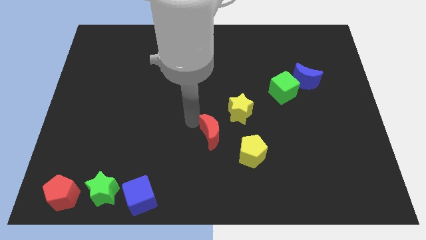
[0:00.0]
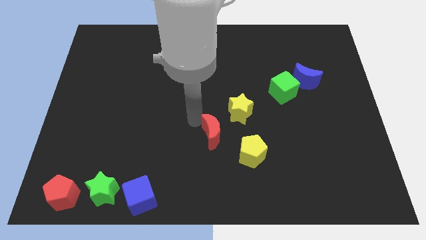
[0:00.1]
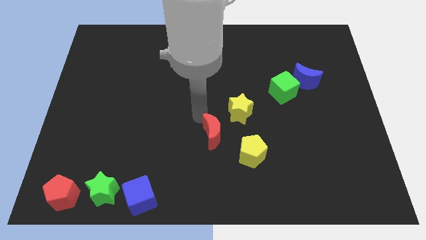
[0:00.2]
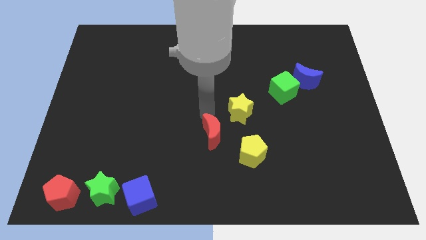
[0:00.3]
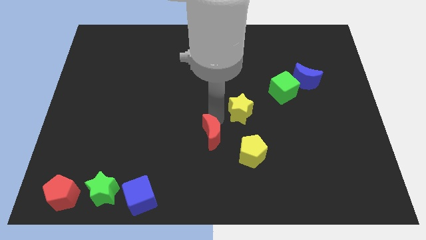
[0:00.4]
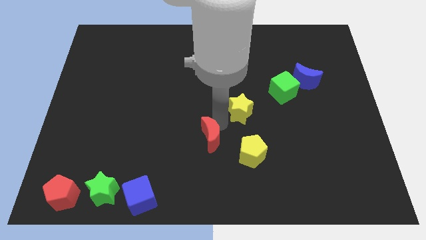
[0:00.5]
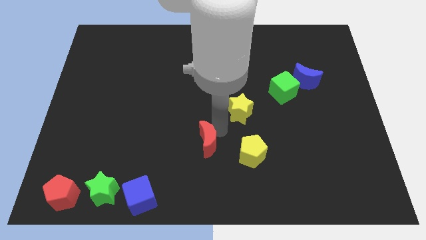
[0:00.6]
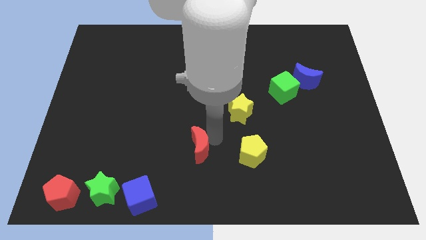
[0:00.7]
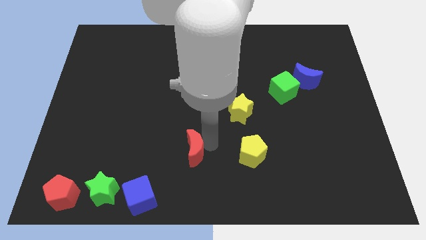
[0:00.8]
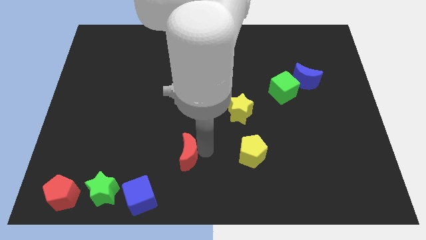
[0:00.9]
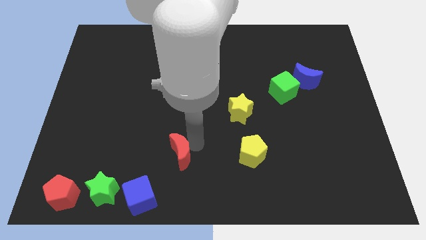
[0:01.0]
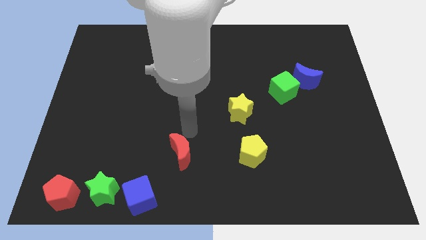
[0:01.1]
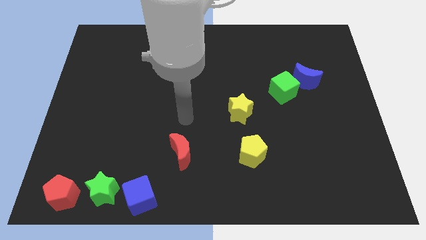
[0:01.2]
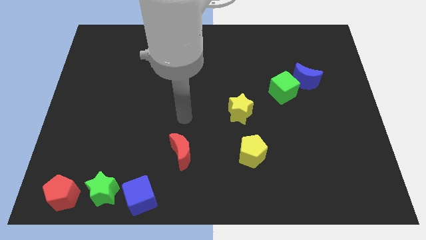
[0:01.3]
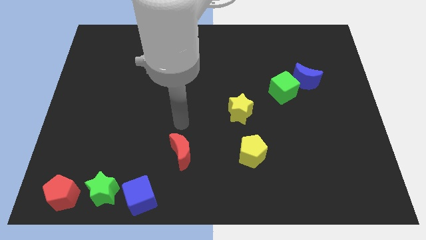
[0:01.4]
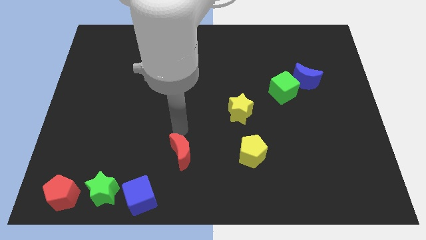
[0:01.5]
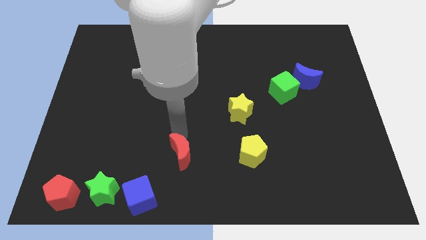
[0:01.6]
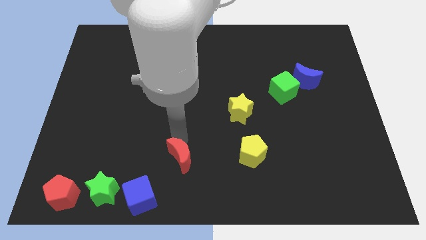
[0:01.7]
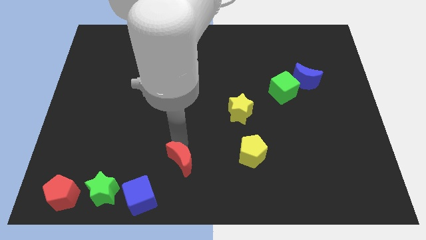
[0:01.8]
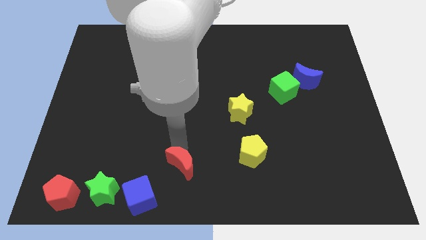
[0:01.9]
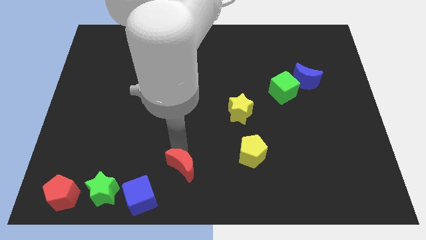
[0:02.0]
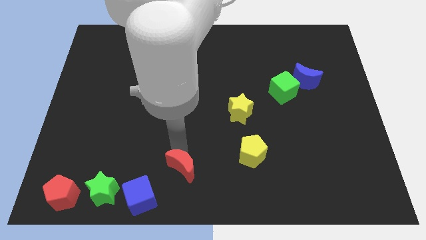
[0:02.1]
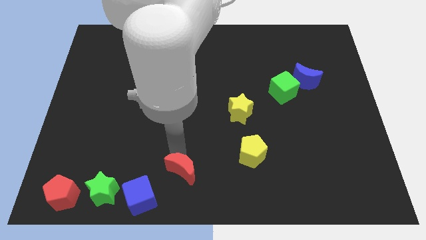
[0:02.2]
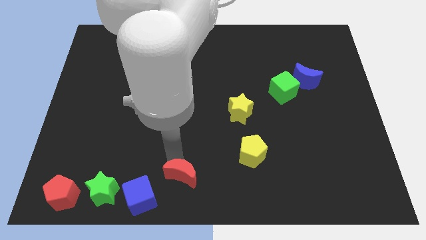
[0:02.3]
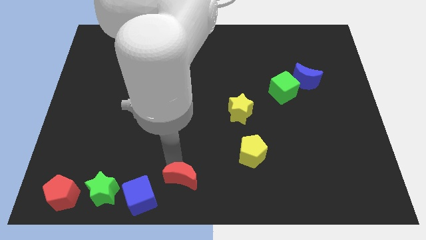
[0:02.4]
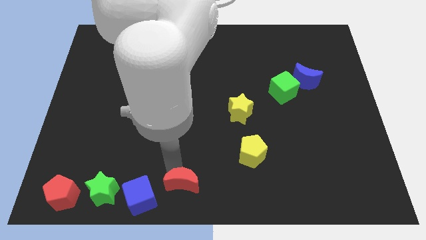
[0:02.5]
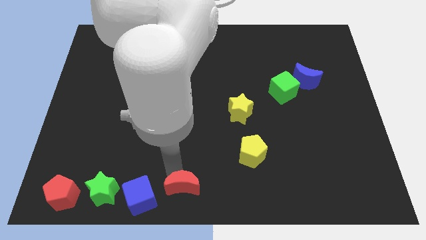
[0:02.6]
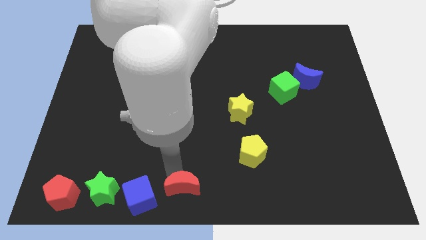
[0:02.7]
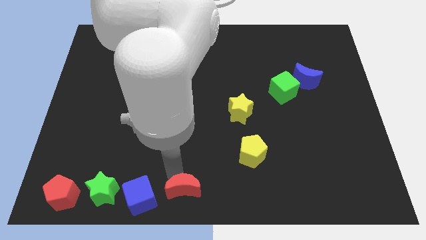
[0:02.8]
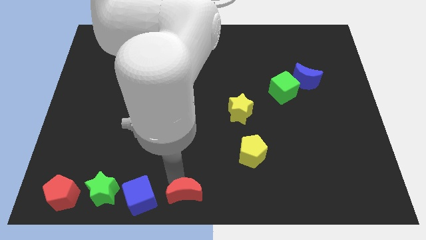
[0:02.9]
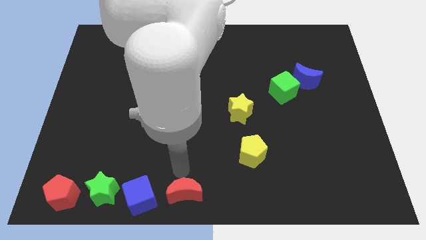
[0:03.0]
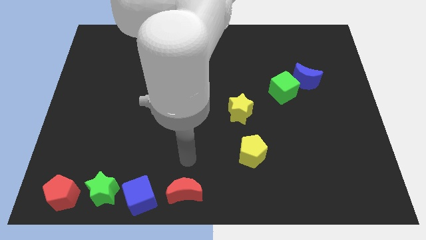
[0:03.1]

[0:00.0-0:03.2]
move the red crescent to the bottom center of the board

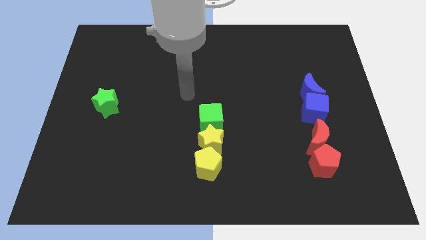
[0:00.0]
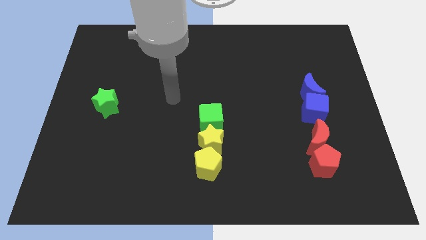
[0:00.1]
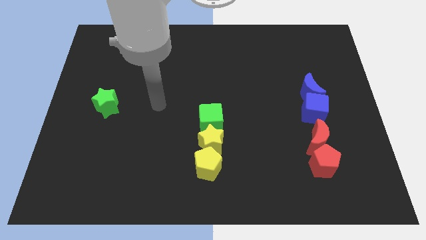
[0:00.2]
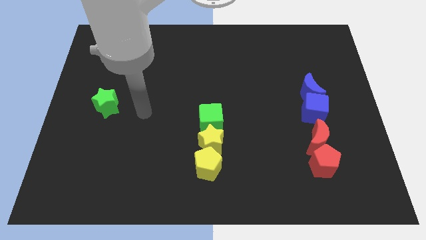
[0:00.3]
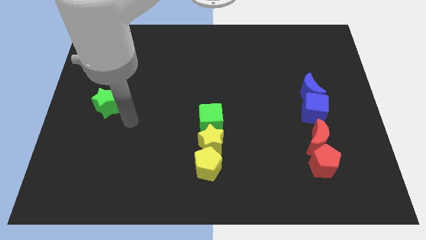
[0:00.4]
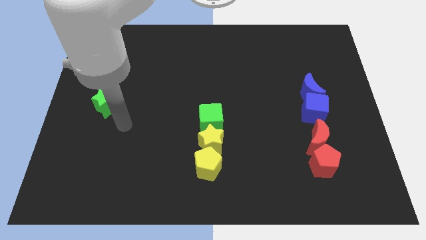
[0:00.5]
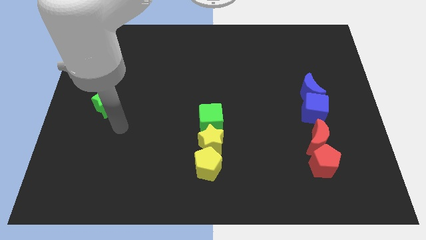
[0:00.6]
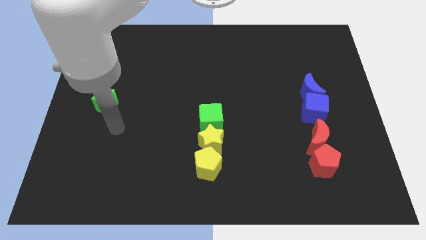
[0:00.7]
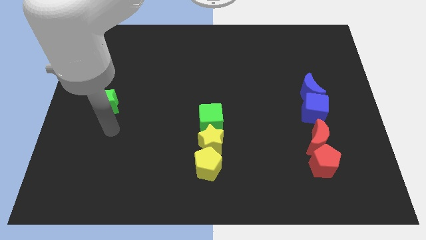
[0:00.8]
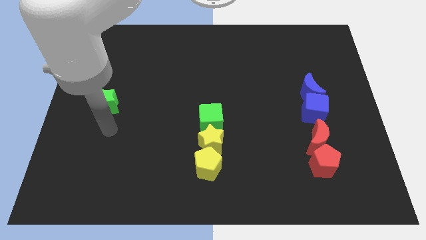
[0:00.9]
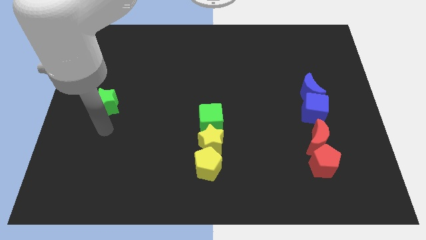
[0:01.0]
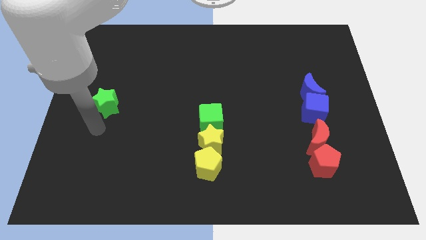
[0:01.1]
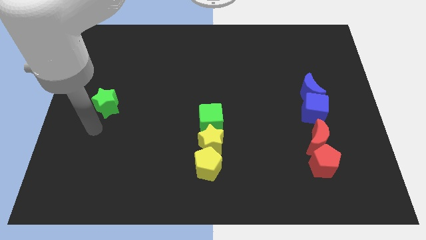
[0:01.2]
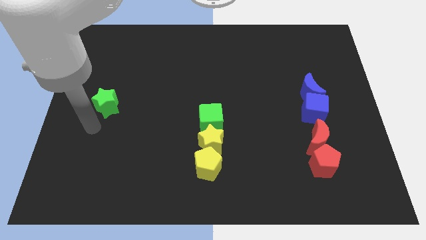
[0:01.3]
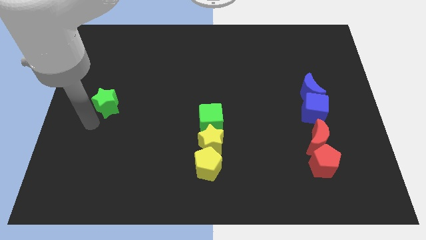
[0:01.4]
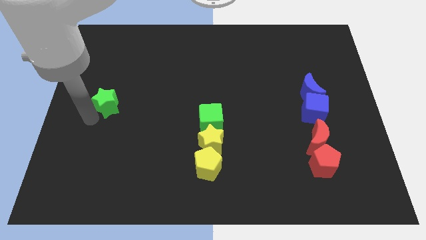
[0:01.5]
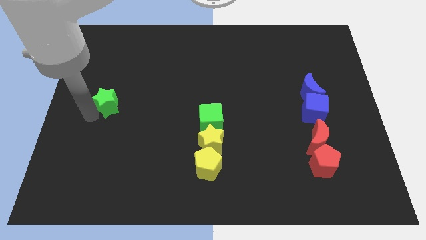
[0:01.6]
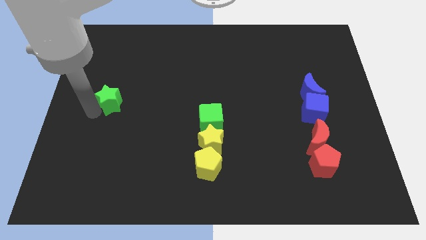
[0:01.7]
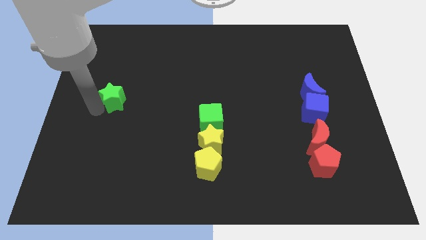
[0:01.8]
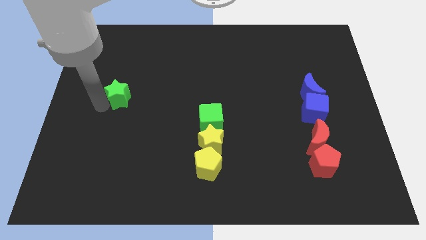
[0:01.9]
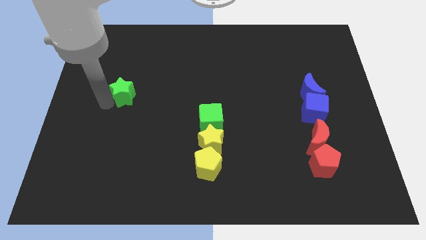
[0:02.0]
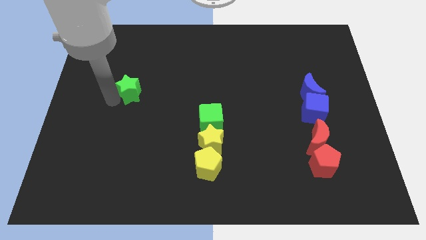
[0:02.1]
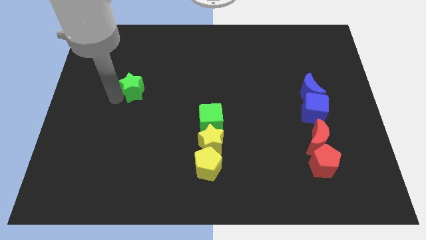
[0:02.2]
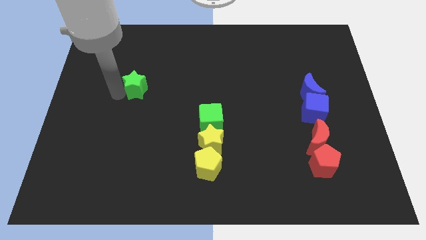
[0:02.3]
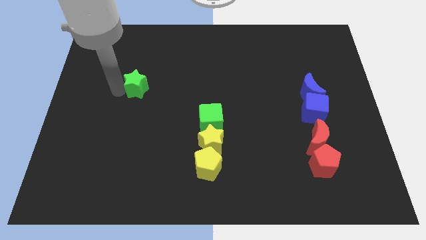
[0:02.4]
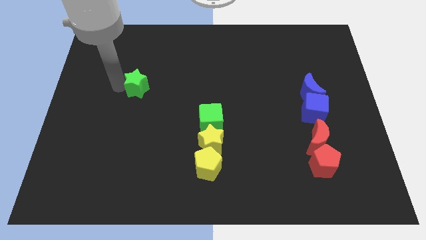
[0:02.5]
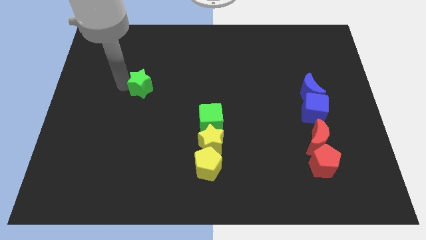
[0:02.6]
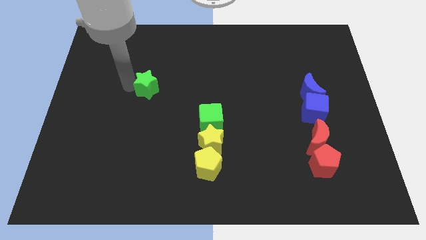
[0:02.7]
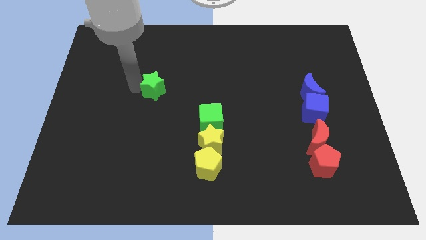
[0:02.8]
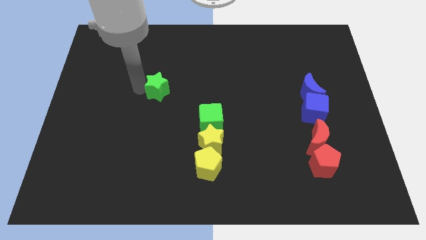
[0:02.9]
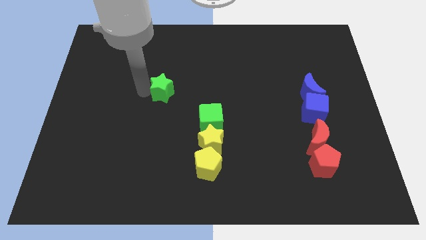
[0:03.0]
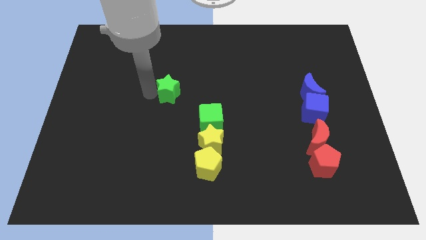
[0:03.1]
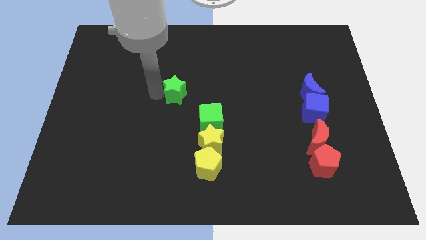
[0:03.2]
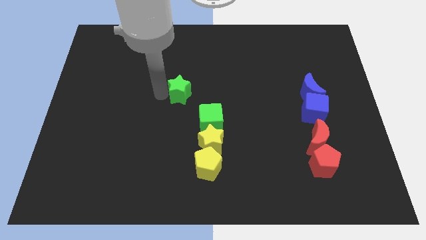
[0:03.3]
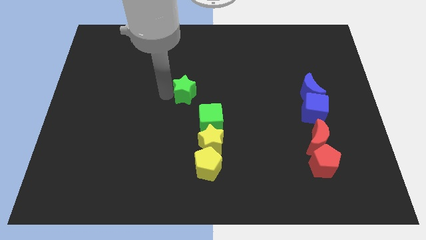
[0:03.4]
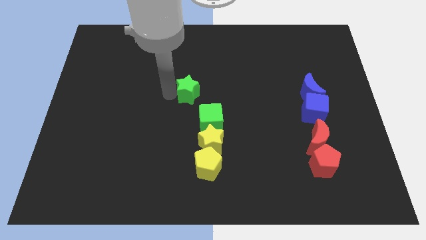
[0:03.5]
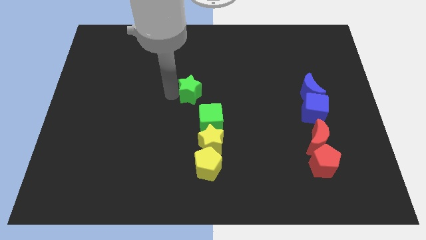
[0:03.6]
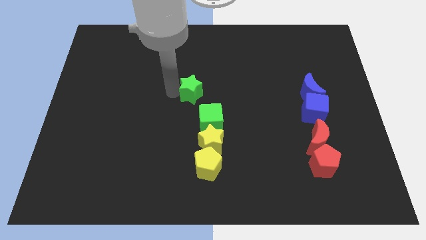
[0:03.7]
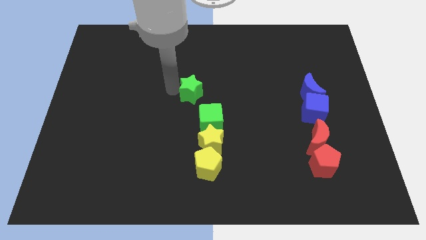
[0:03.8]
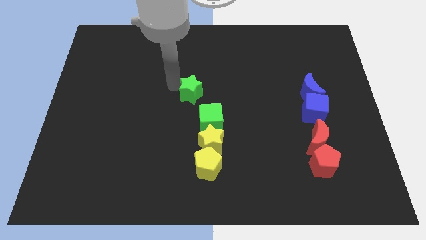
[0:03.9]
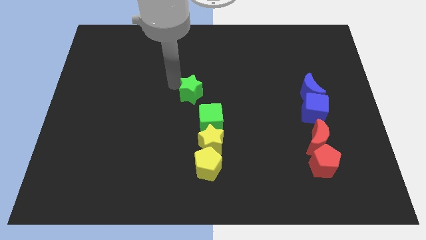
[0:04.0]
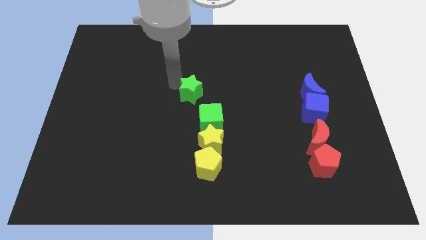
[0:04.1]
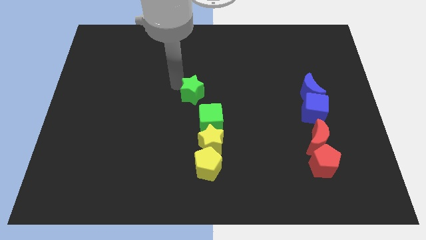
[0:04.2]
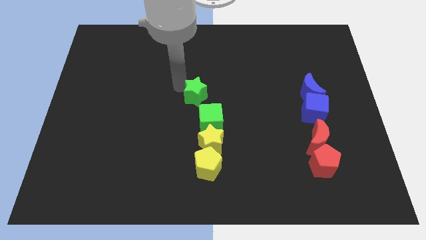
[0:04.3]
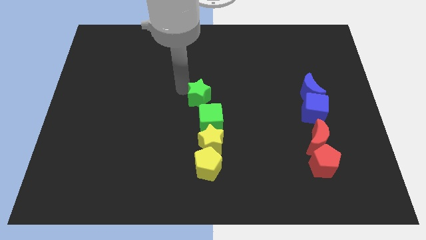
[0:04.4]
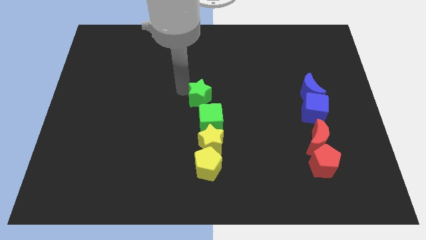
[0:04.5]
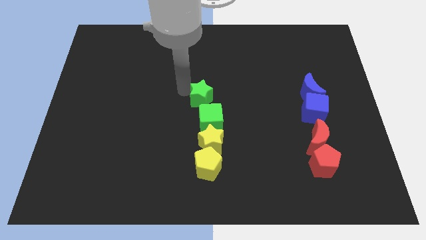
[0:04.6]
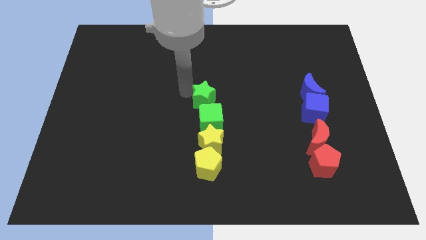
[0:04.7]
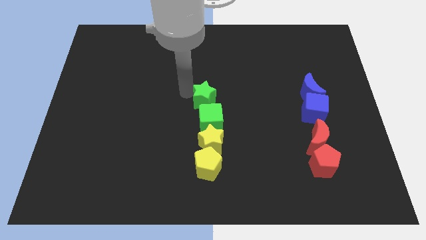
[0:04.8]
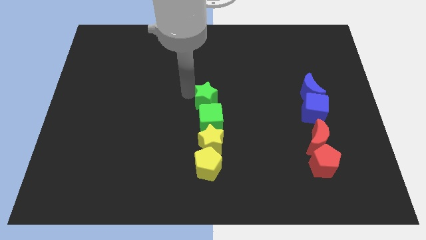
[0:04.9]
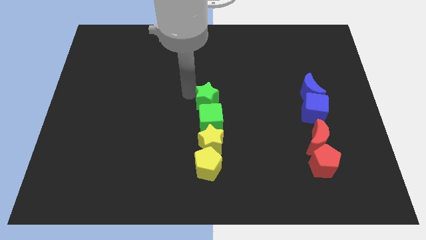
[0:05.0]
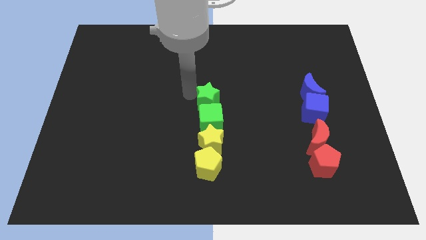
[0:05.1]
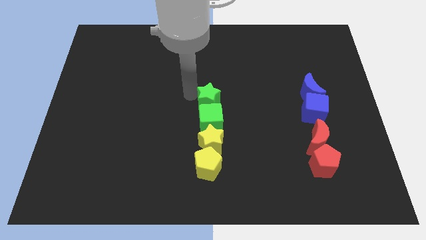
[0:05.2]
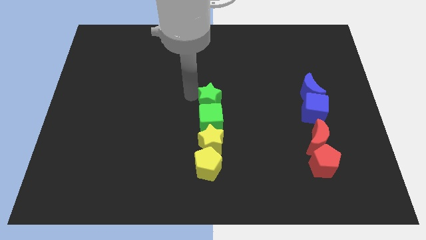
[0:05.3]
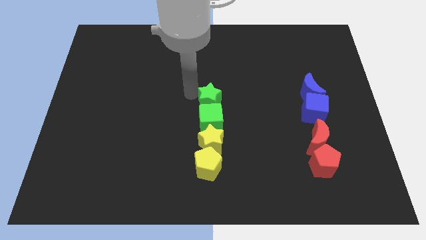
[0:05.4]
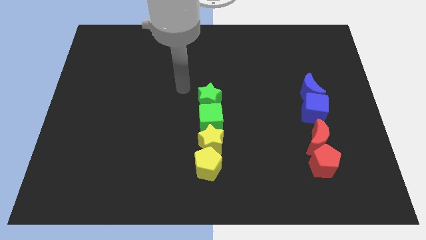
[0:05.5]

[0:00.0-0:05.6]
move the green star to the center of the board
